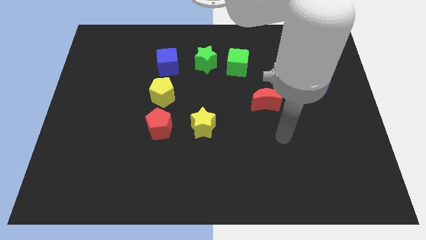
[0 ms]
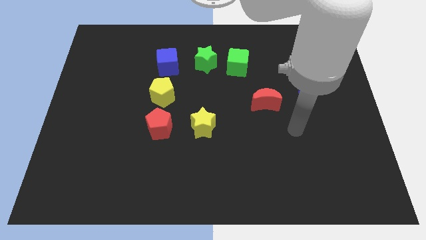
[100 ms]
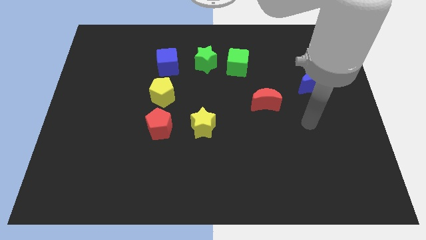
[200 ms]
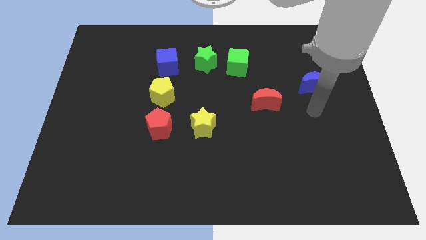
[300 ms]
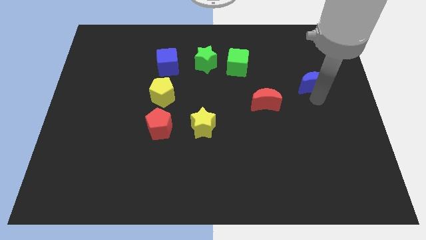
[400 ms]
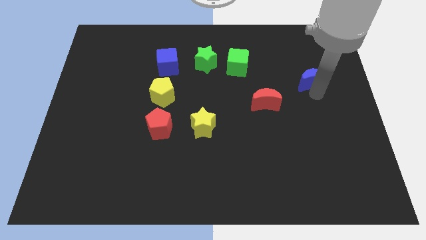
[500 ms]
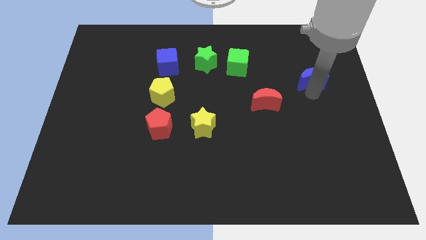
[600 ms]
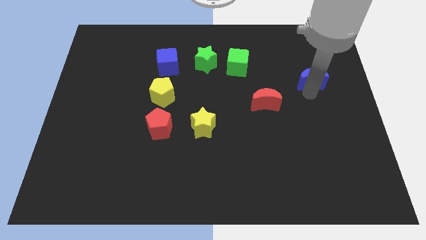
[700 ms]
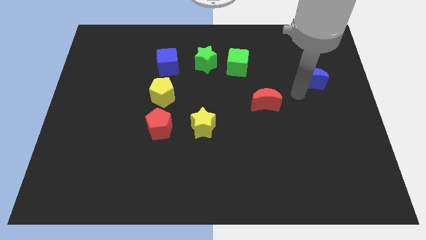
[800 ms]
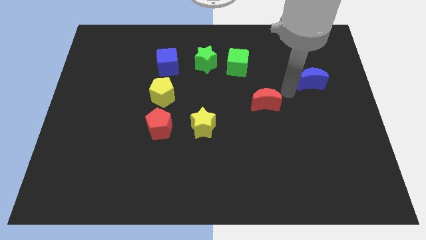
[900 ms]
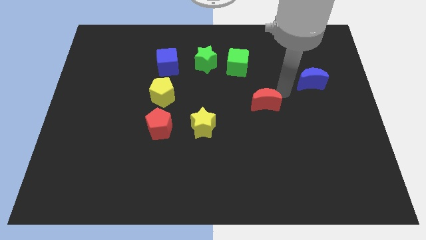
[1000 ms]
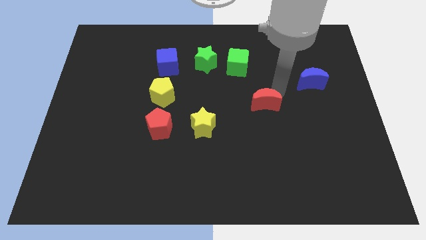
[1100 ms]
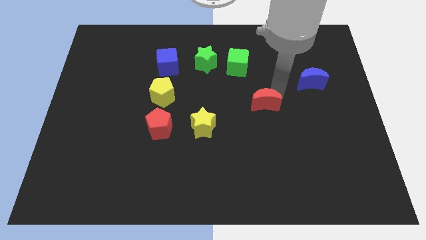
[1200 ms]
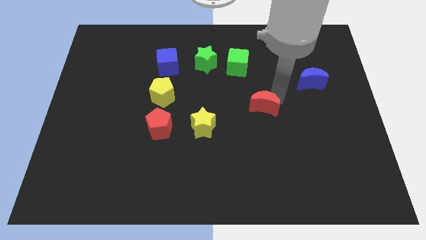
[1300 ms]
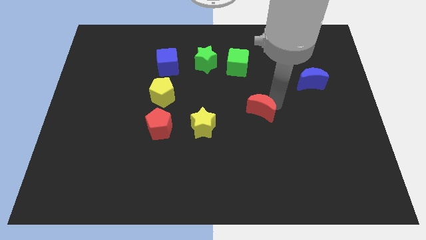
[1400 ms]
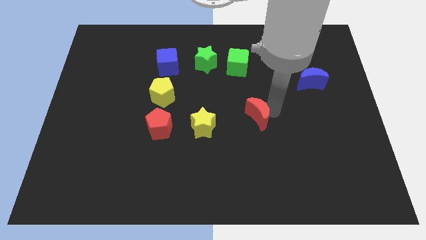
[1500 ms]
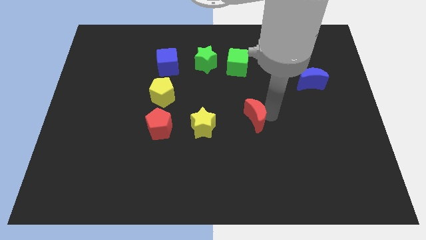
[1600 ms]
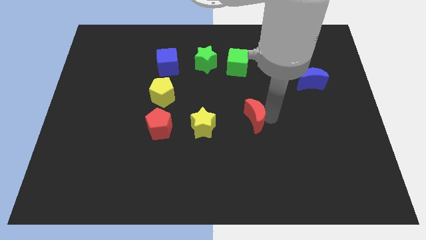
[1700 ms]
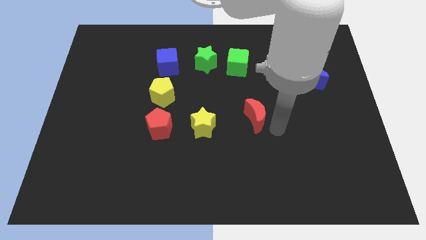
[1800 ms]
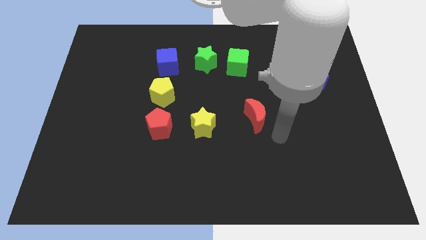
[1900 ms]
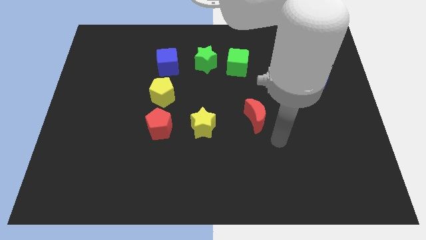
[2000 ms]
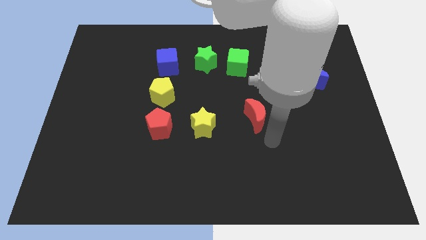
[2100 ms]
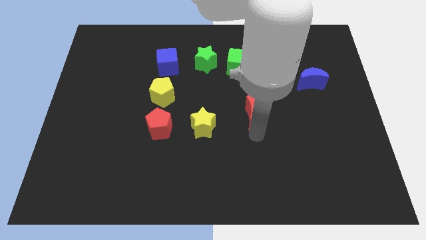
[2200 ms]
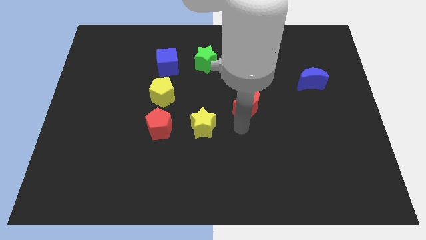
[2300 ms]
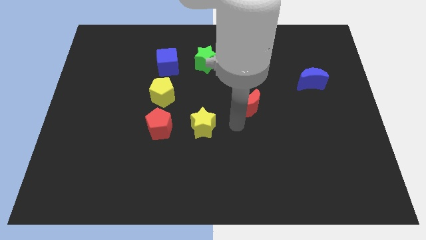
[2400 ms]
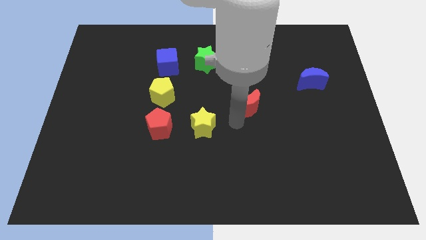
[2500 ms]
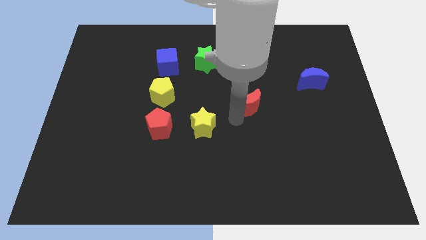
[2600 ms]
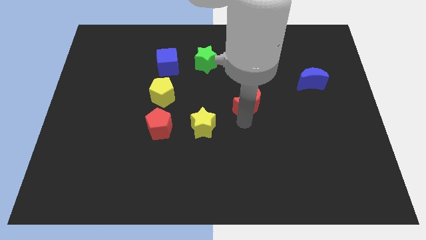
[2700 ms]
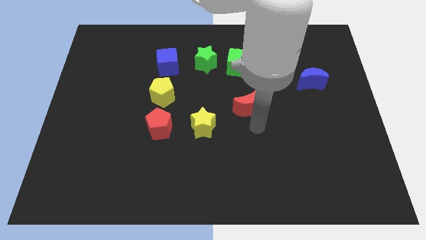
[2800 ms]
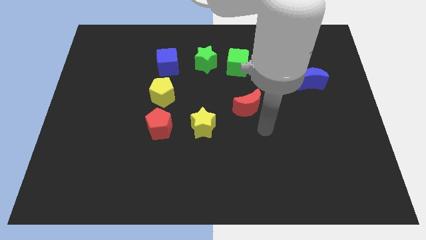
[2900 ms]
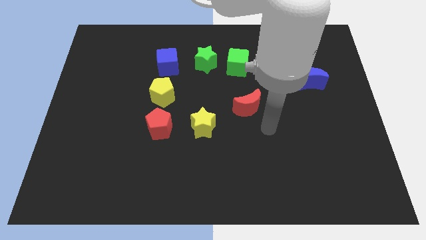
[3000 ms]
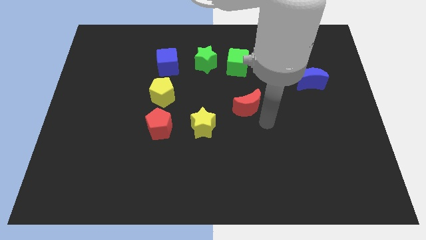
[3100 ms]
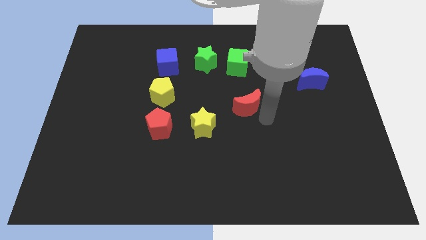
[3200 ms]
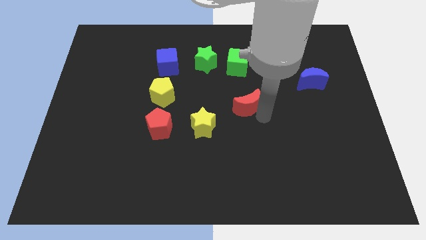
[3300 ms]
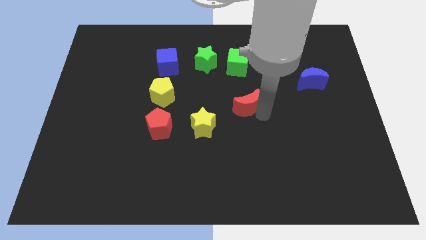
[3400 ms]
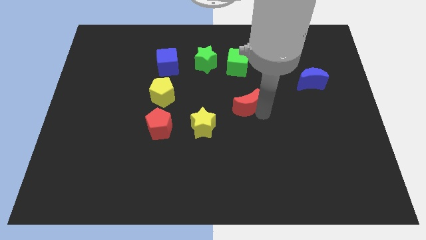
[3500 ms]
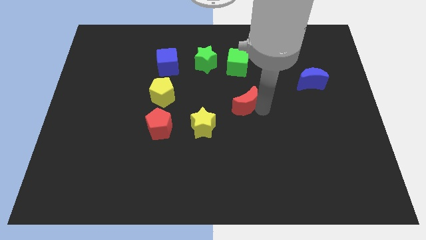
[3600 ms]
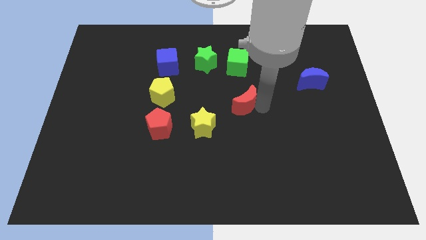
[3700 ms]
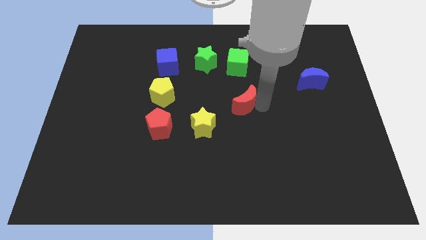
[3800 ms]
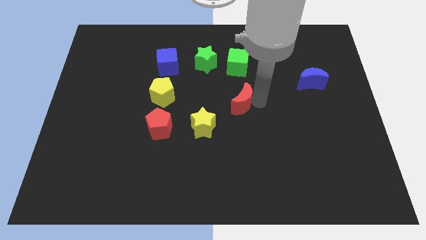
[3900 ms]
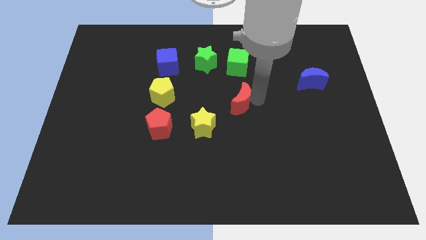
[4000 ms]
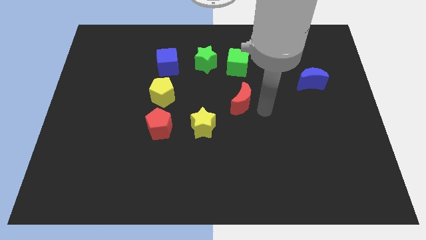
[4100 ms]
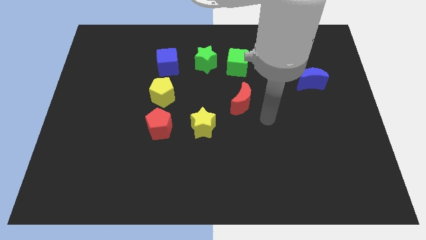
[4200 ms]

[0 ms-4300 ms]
push the red crescent below the green block

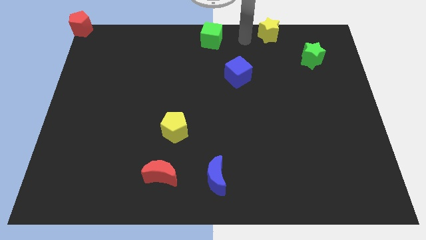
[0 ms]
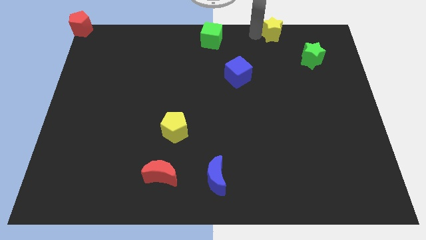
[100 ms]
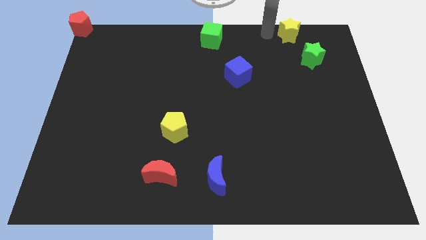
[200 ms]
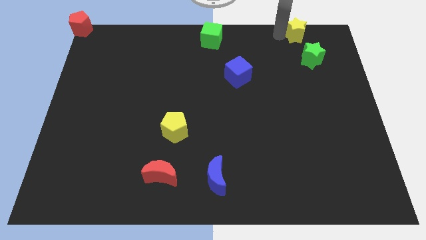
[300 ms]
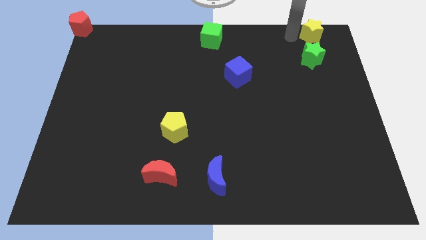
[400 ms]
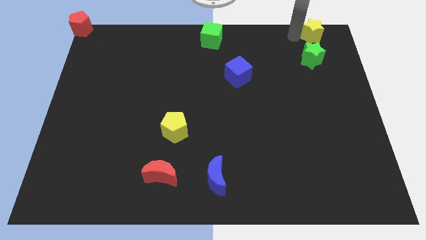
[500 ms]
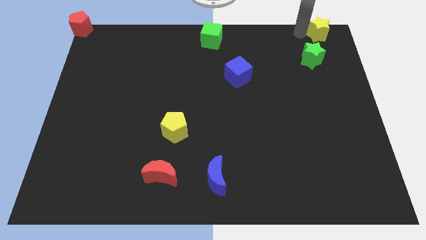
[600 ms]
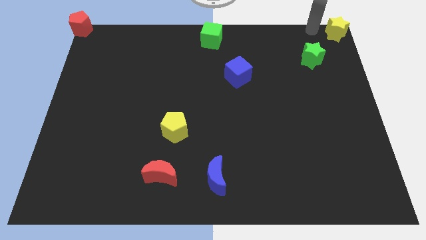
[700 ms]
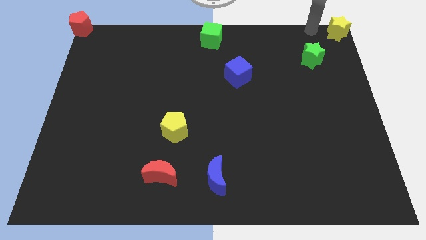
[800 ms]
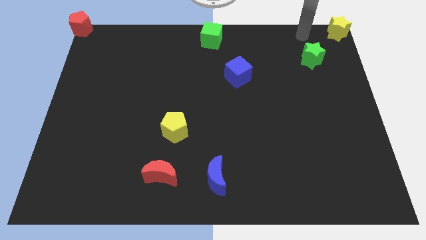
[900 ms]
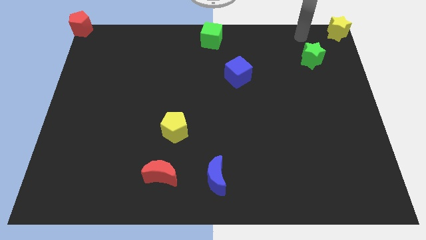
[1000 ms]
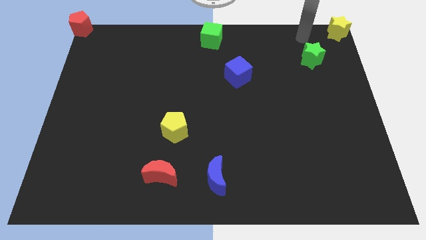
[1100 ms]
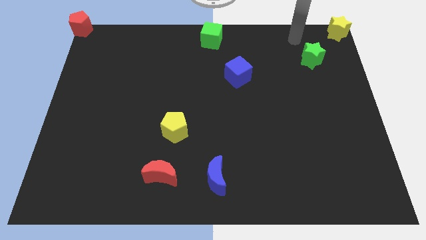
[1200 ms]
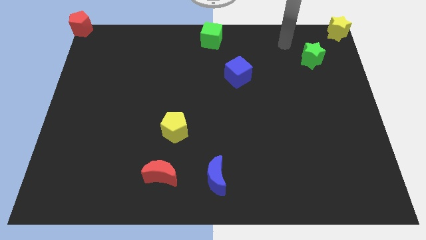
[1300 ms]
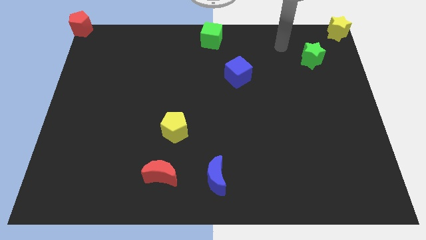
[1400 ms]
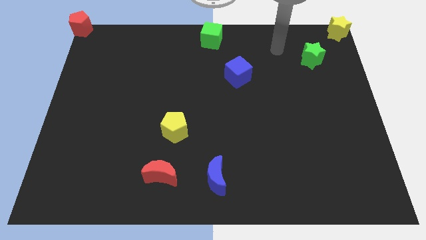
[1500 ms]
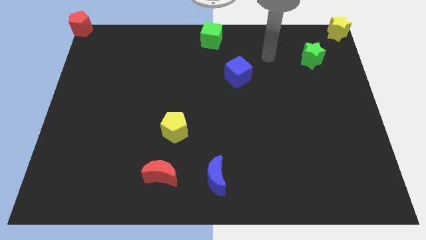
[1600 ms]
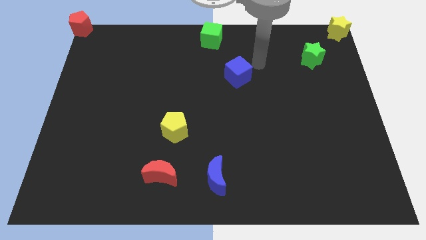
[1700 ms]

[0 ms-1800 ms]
push the yellow star to the top right

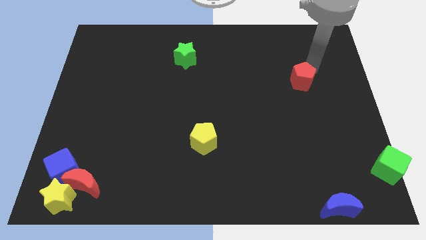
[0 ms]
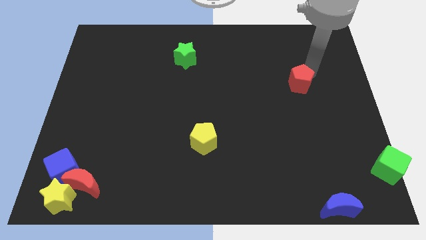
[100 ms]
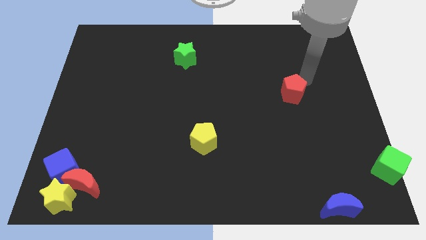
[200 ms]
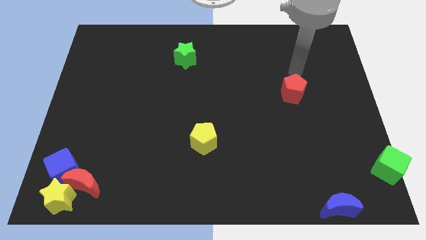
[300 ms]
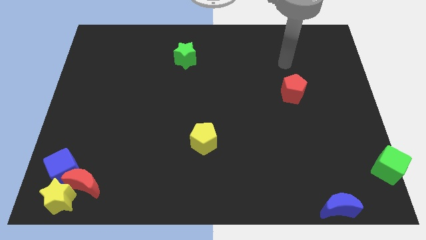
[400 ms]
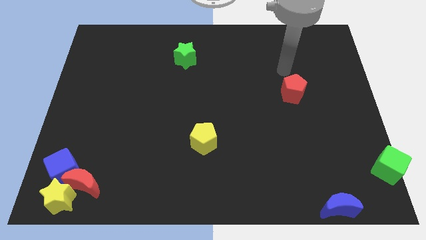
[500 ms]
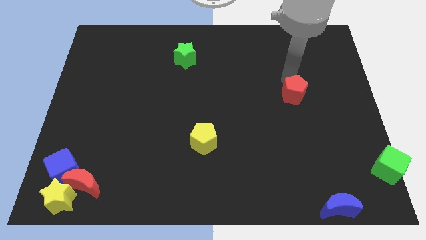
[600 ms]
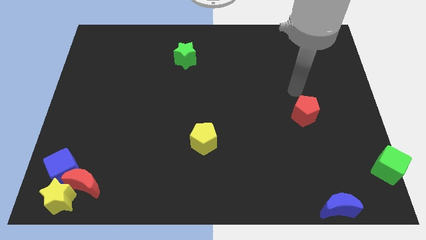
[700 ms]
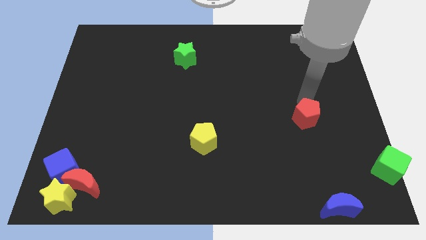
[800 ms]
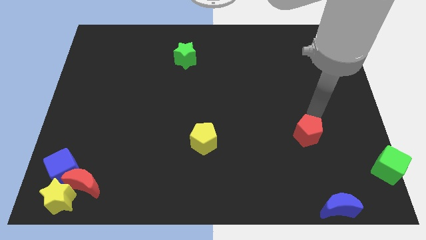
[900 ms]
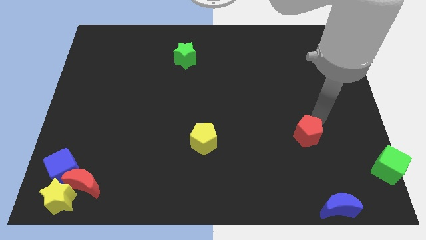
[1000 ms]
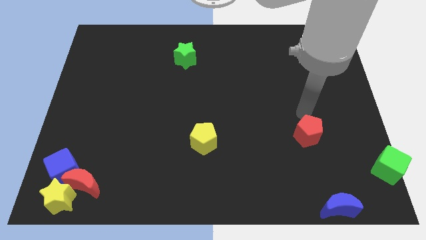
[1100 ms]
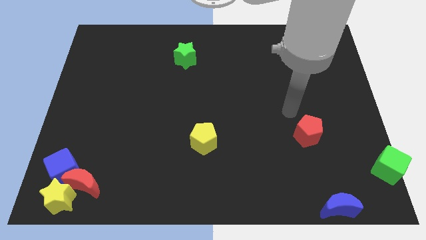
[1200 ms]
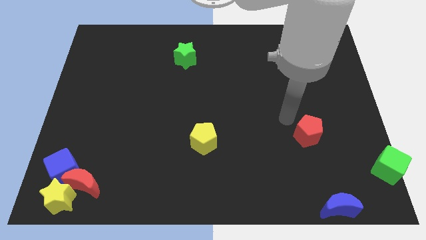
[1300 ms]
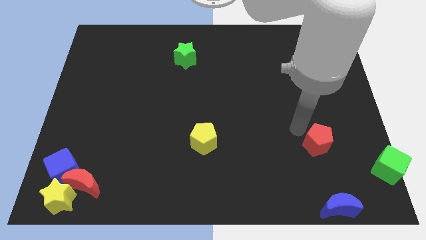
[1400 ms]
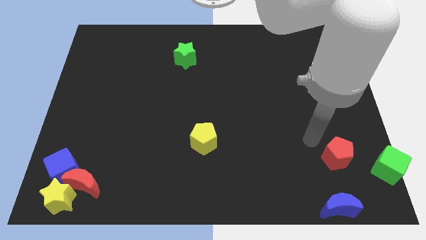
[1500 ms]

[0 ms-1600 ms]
move the red pentagon towards blue crescent

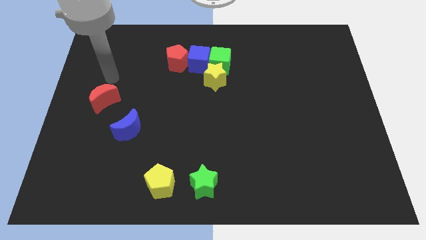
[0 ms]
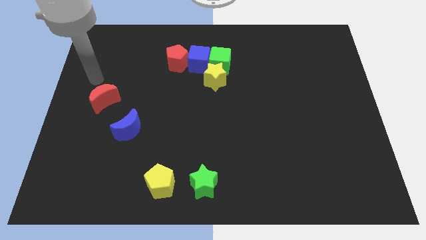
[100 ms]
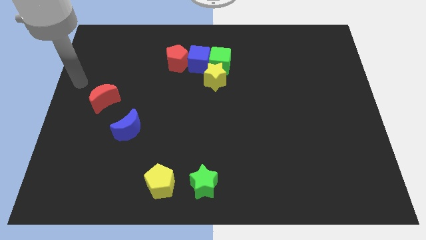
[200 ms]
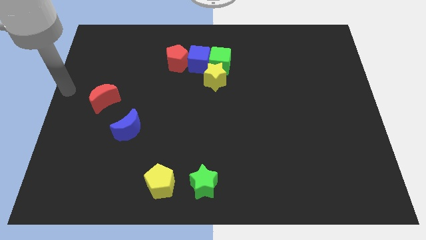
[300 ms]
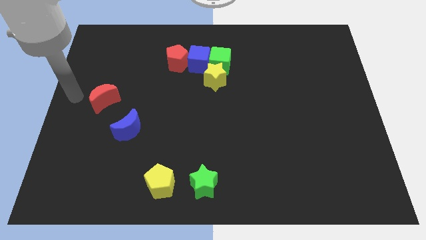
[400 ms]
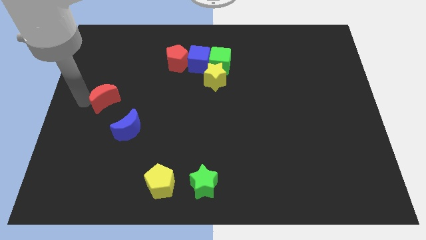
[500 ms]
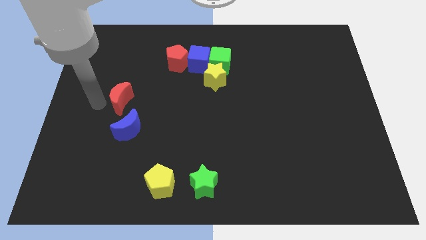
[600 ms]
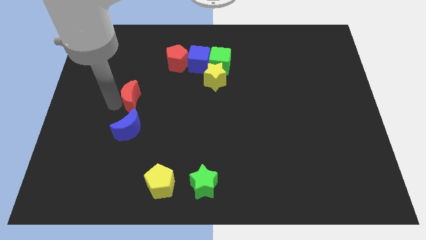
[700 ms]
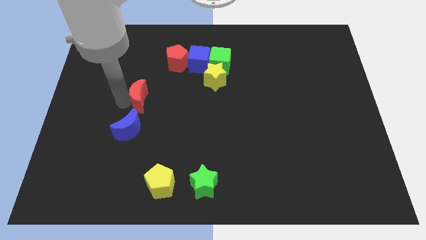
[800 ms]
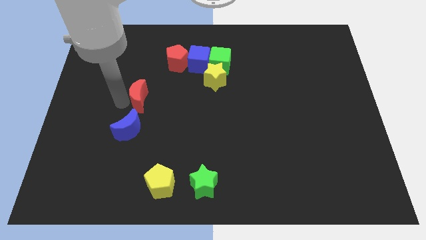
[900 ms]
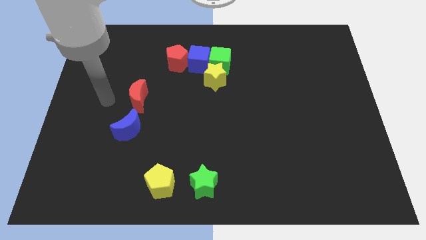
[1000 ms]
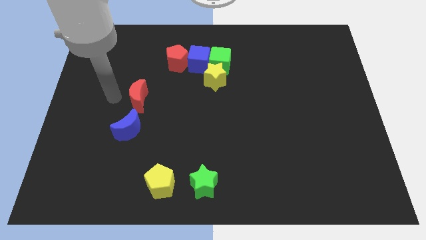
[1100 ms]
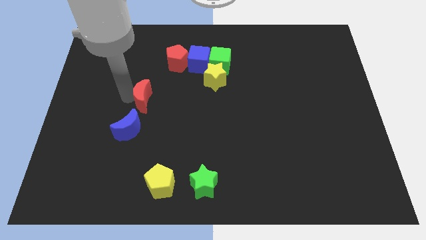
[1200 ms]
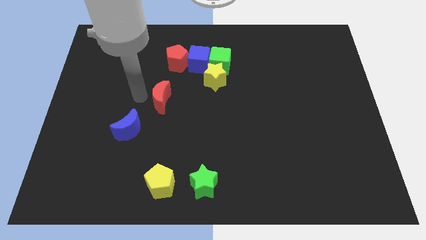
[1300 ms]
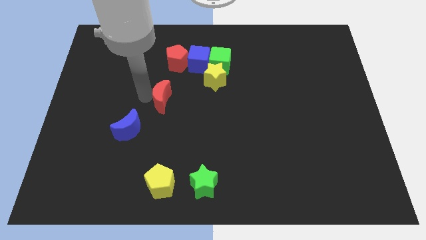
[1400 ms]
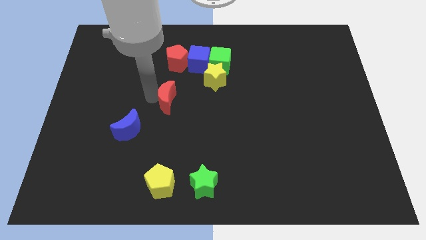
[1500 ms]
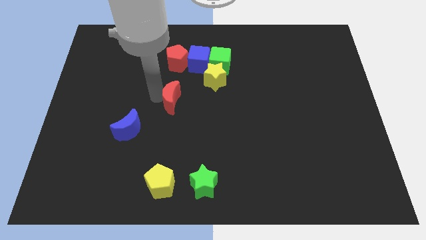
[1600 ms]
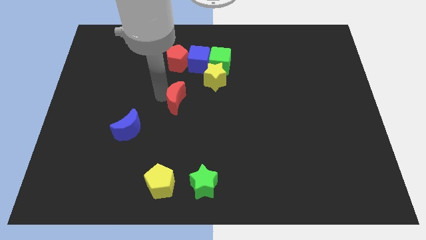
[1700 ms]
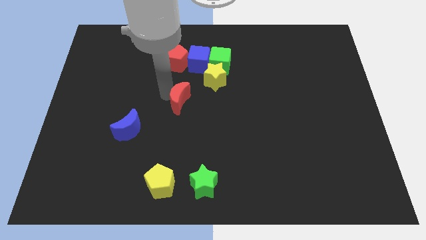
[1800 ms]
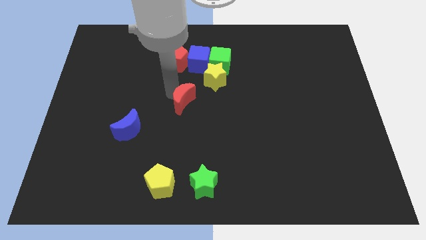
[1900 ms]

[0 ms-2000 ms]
place the red moon towards the center of the board
